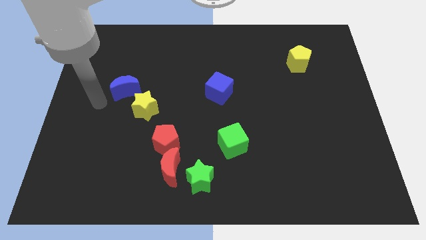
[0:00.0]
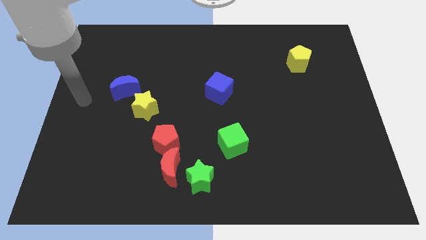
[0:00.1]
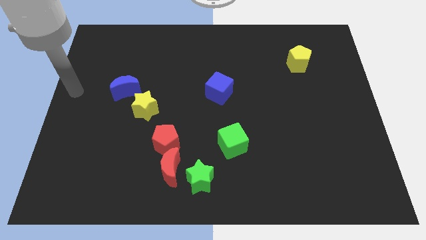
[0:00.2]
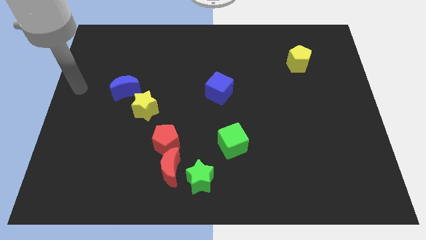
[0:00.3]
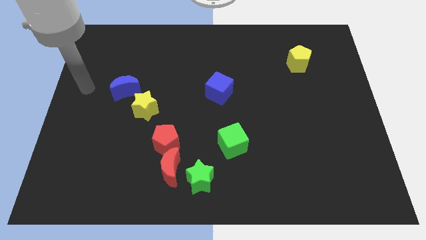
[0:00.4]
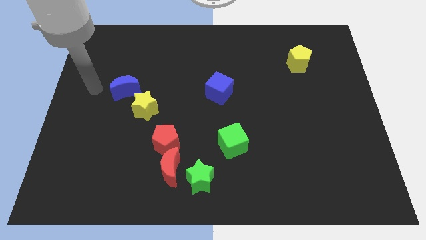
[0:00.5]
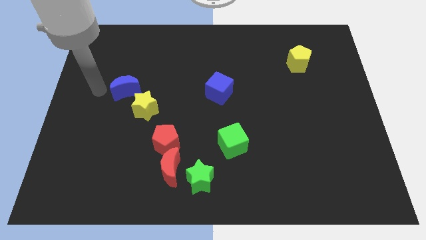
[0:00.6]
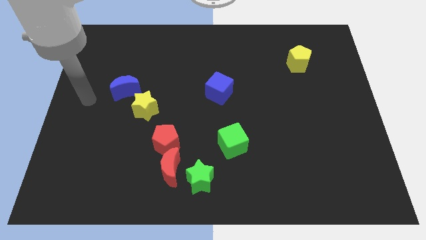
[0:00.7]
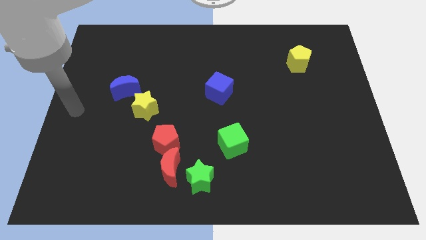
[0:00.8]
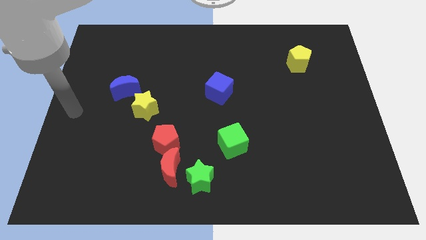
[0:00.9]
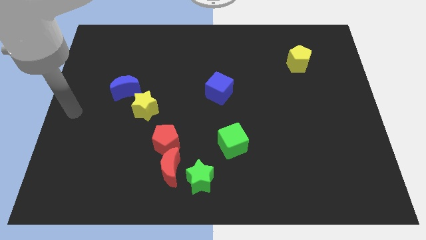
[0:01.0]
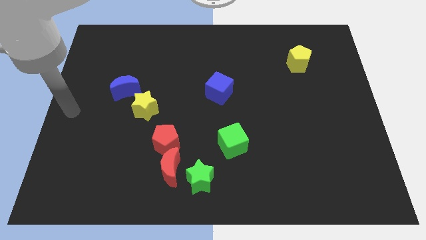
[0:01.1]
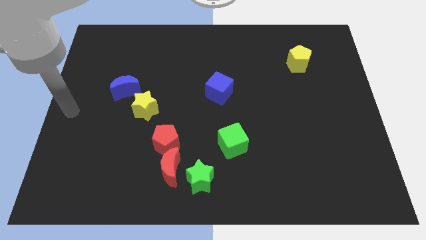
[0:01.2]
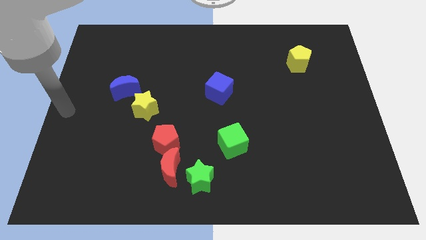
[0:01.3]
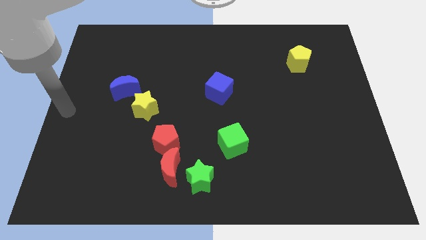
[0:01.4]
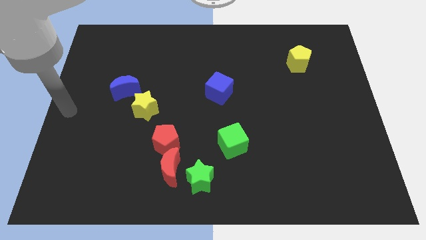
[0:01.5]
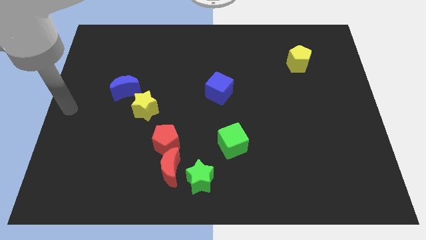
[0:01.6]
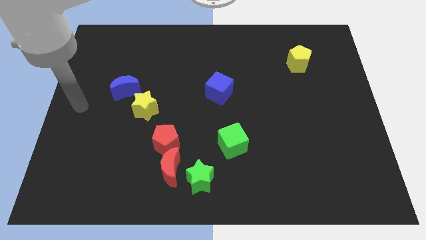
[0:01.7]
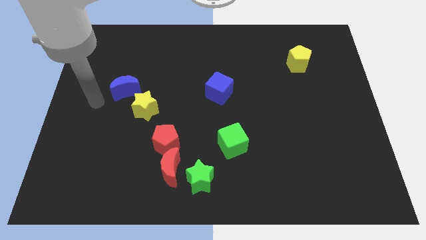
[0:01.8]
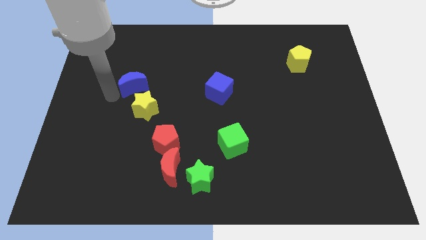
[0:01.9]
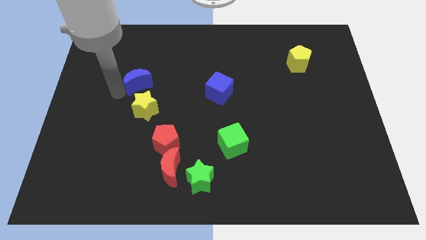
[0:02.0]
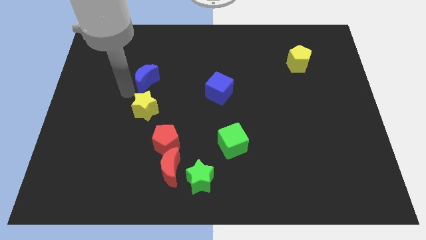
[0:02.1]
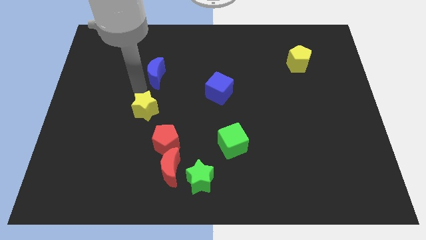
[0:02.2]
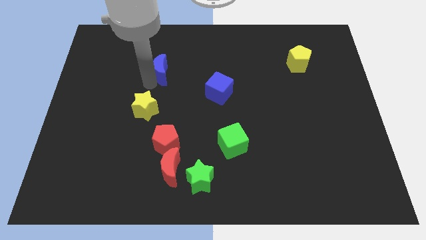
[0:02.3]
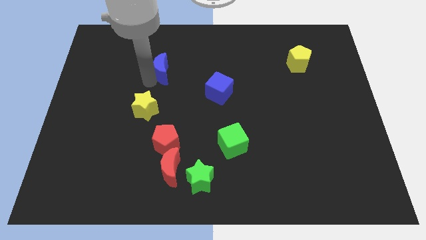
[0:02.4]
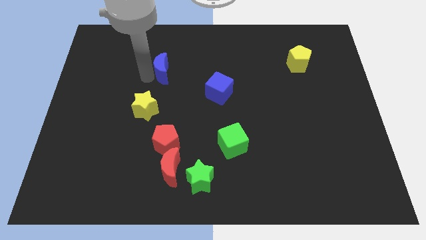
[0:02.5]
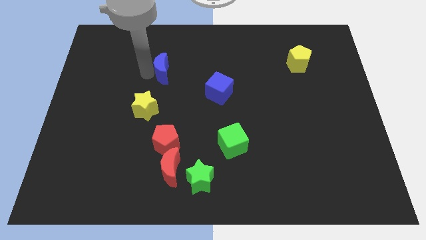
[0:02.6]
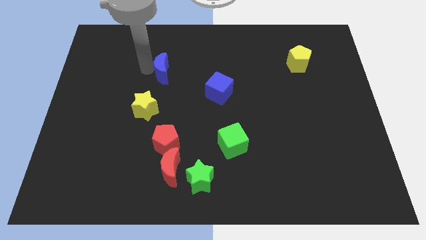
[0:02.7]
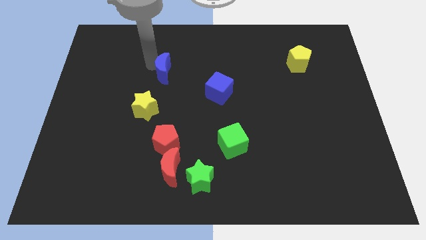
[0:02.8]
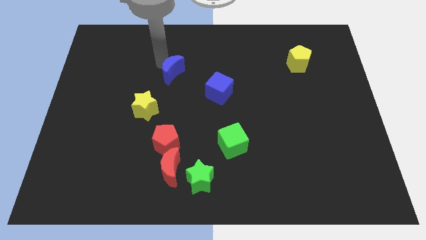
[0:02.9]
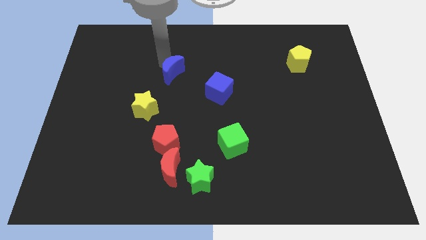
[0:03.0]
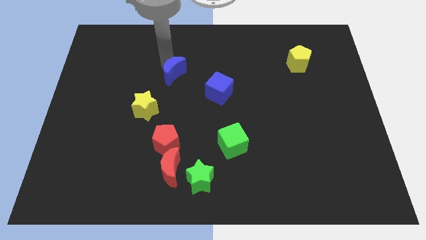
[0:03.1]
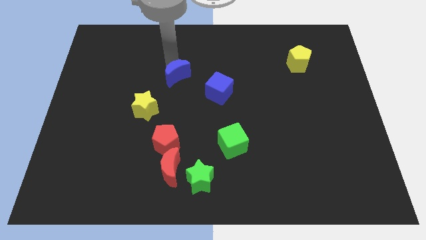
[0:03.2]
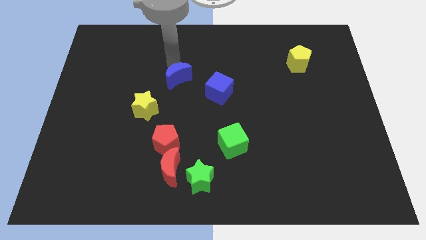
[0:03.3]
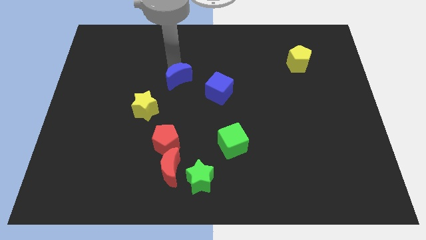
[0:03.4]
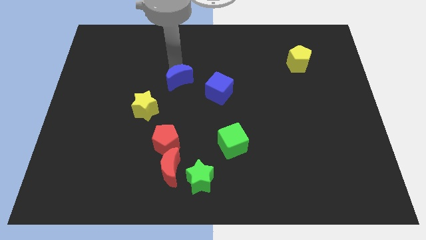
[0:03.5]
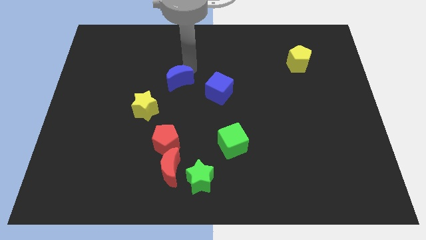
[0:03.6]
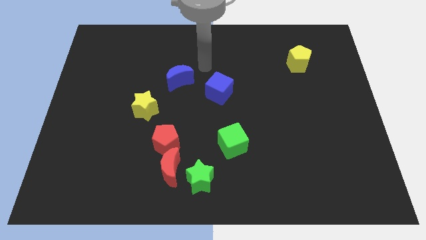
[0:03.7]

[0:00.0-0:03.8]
slide the blue moon diagonally on the top right side of the yellow star

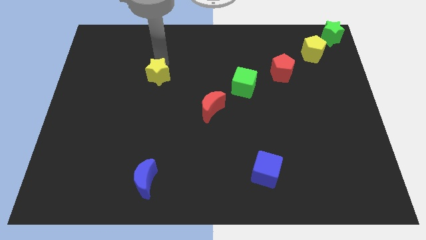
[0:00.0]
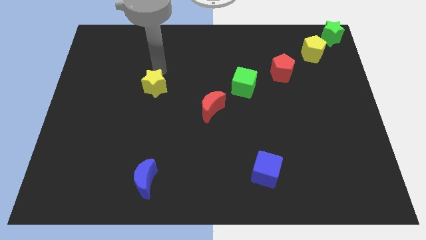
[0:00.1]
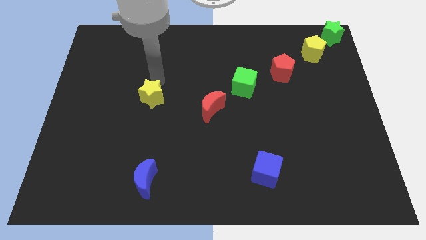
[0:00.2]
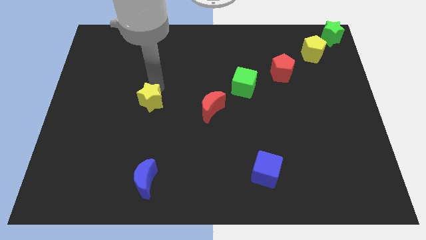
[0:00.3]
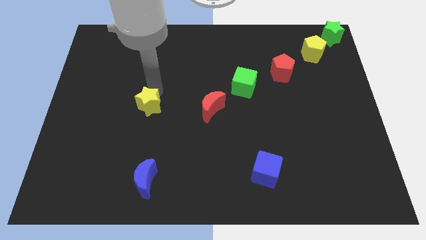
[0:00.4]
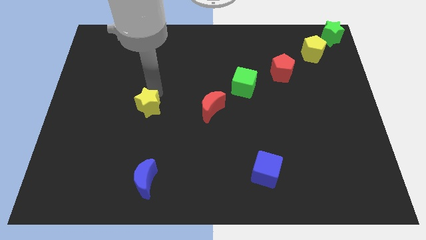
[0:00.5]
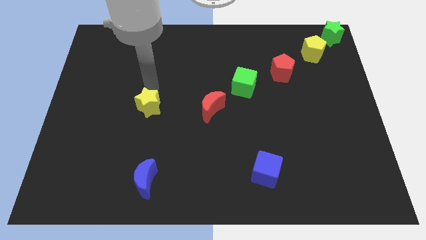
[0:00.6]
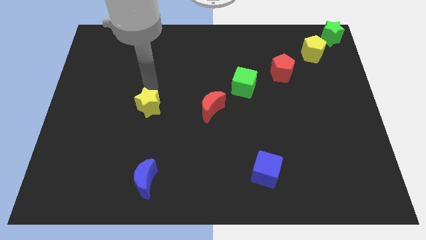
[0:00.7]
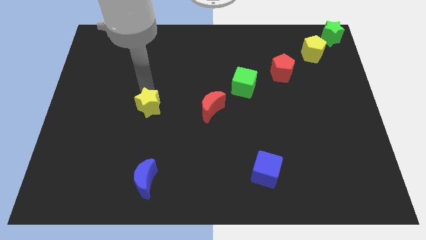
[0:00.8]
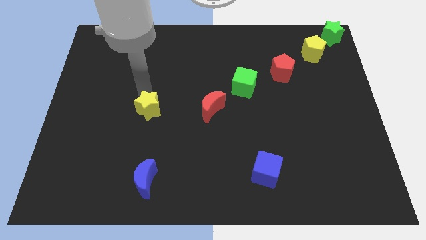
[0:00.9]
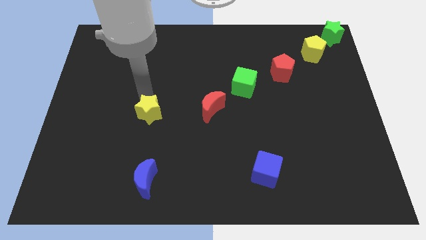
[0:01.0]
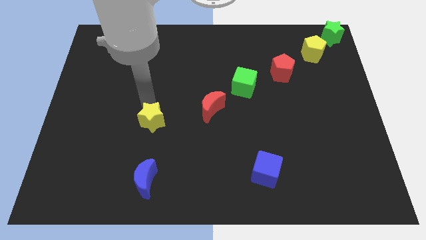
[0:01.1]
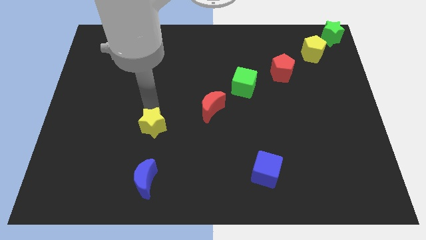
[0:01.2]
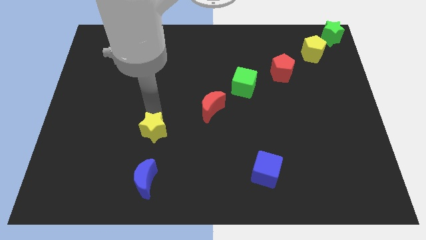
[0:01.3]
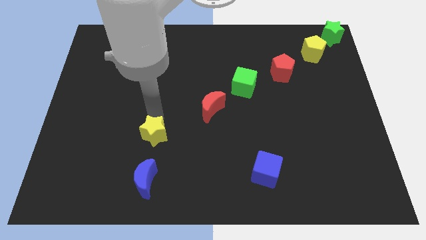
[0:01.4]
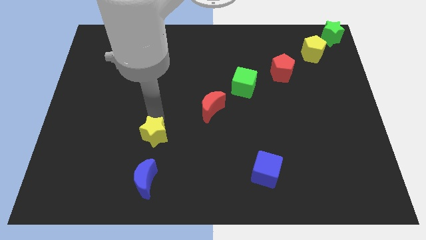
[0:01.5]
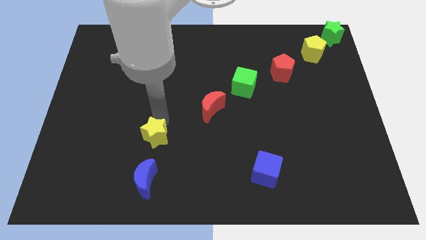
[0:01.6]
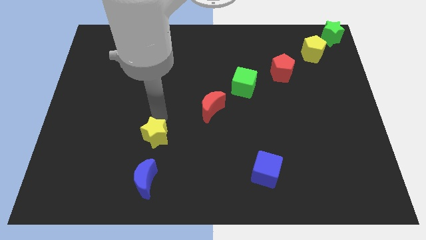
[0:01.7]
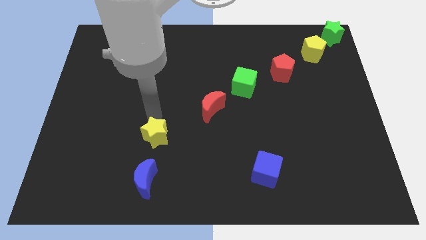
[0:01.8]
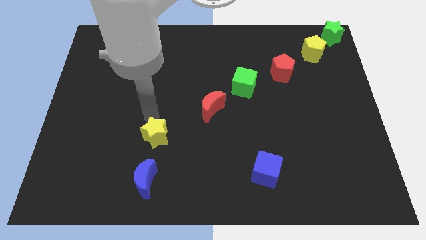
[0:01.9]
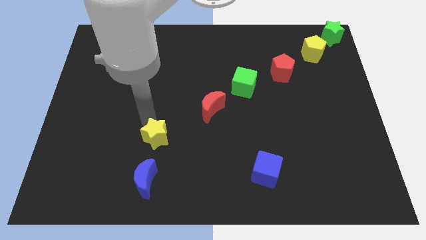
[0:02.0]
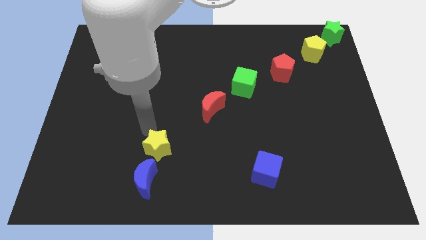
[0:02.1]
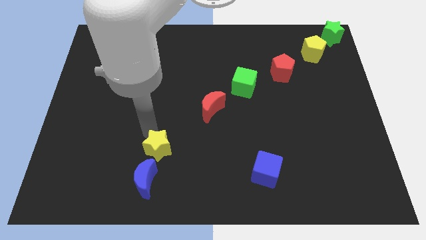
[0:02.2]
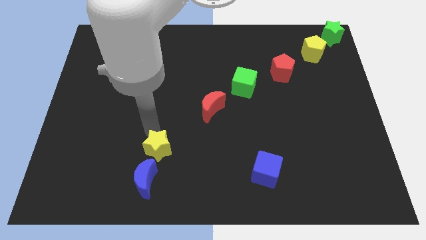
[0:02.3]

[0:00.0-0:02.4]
place yellow star diagonal to red crescent

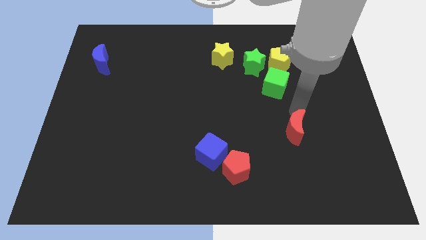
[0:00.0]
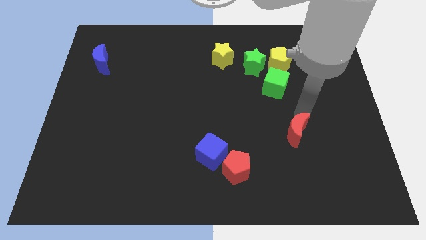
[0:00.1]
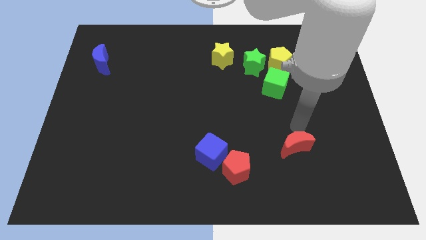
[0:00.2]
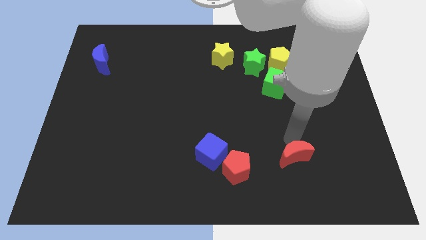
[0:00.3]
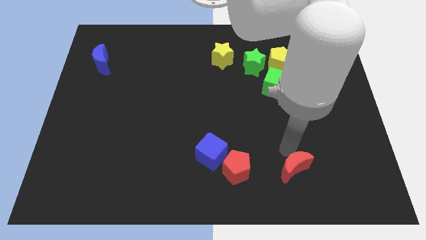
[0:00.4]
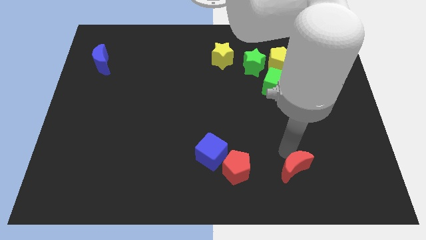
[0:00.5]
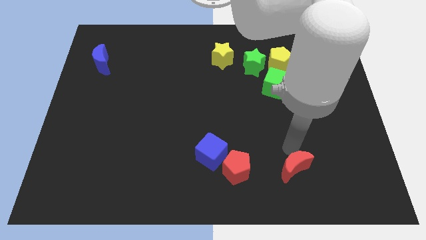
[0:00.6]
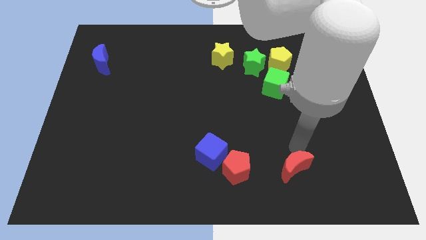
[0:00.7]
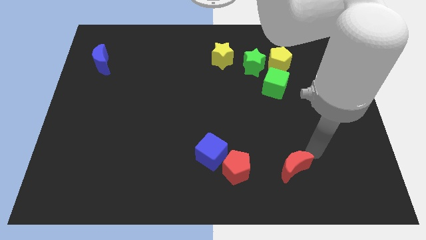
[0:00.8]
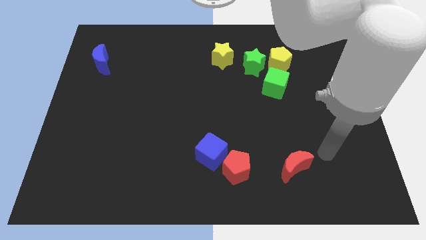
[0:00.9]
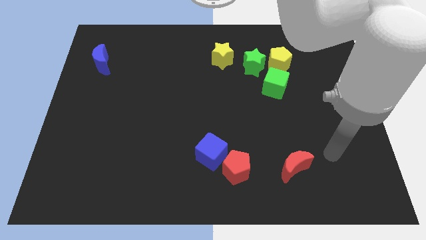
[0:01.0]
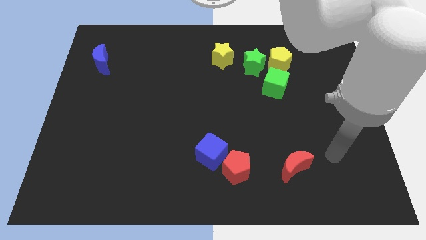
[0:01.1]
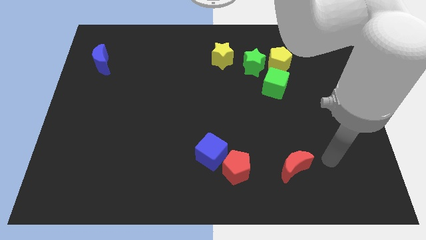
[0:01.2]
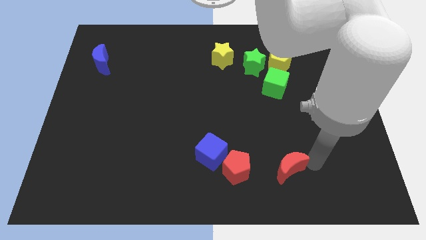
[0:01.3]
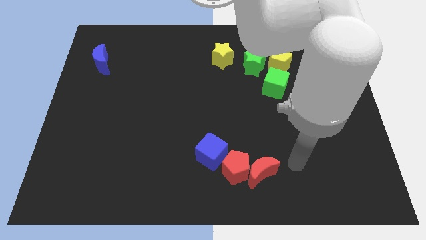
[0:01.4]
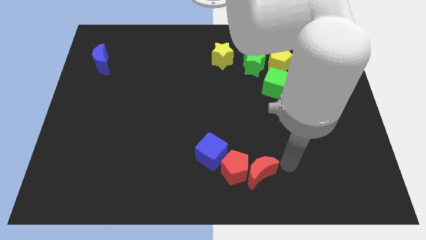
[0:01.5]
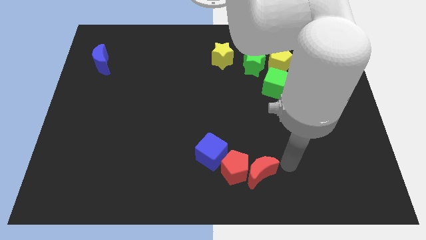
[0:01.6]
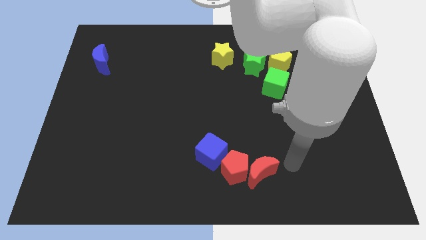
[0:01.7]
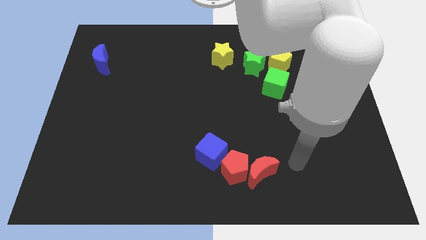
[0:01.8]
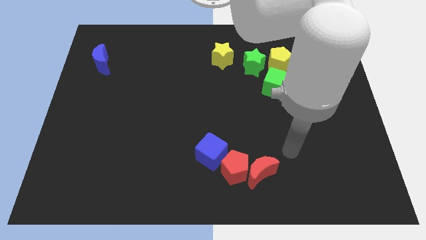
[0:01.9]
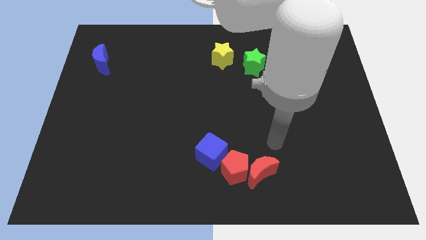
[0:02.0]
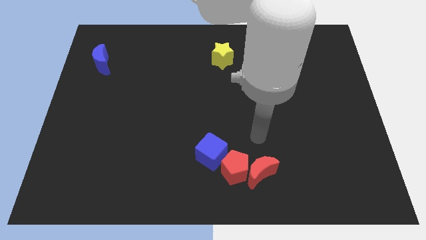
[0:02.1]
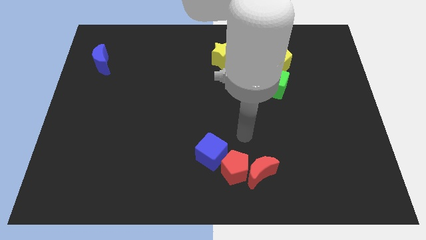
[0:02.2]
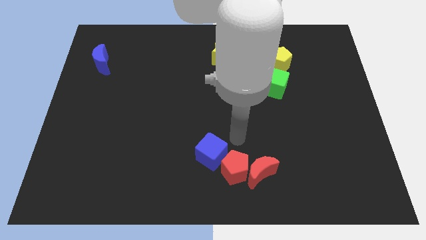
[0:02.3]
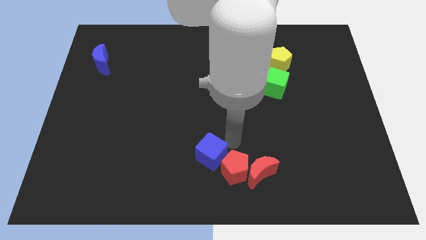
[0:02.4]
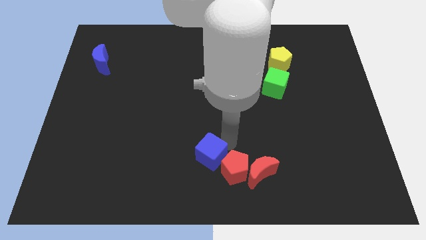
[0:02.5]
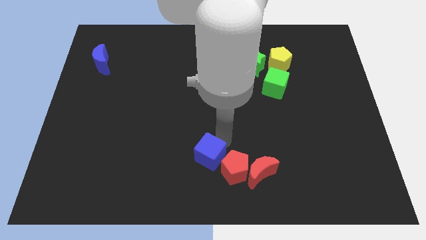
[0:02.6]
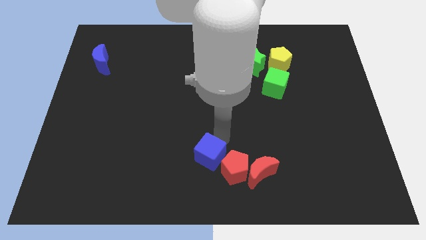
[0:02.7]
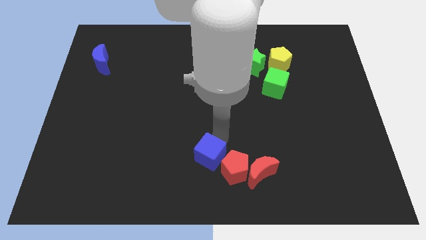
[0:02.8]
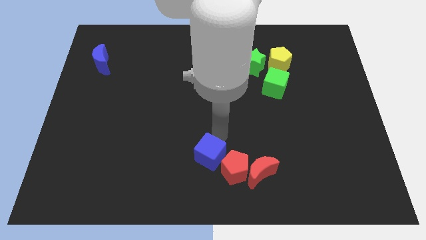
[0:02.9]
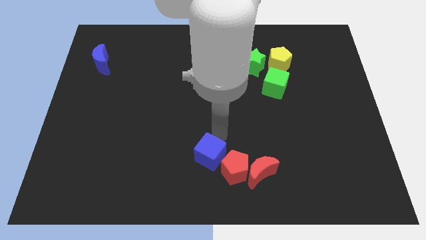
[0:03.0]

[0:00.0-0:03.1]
push red moon in to red pentagon
